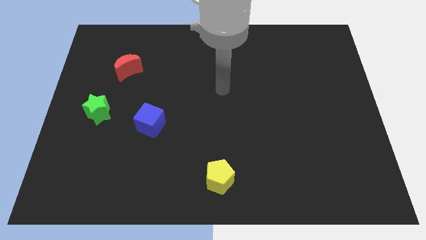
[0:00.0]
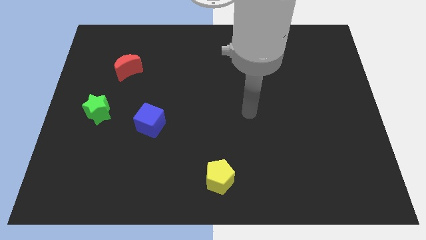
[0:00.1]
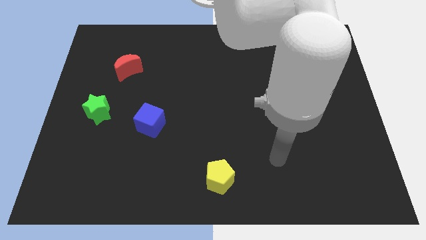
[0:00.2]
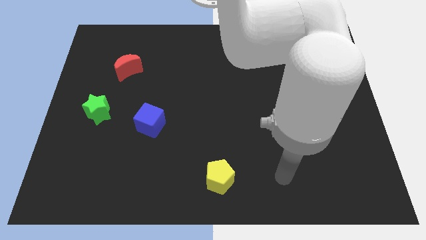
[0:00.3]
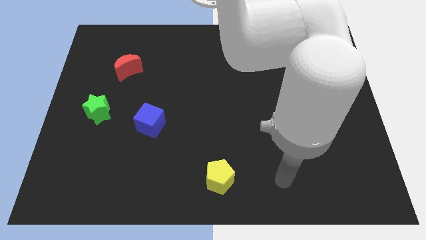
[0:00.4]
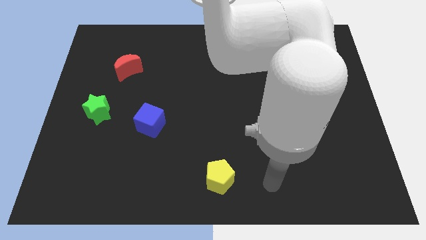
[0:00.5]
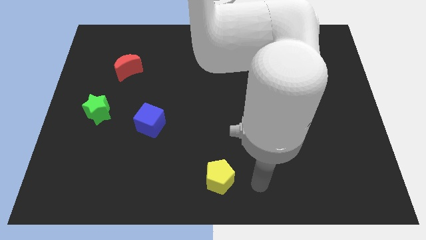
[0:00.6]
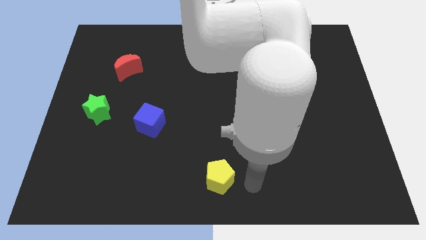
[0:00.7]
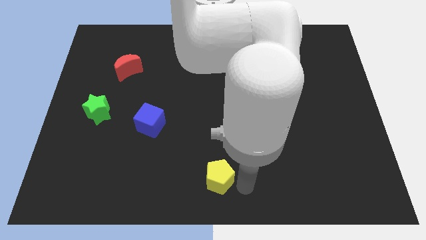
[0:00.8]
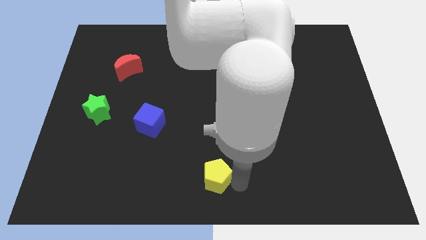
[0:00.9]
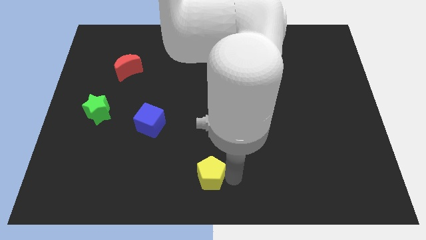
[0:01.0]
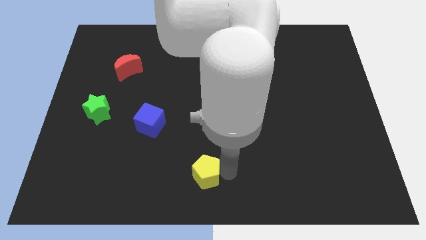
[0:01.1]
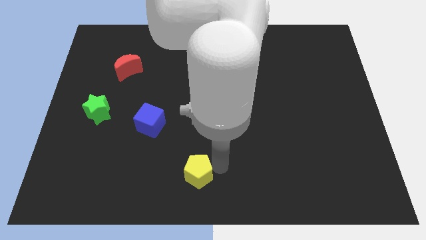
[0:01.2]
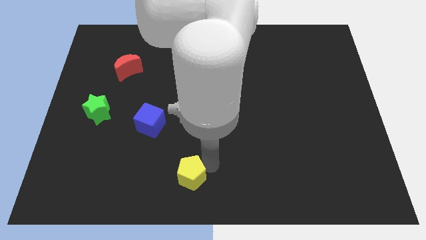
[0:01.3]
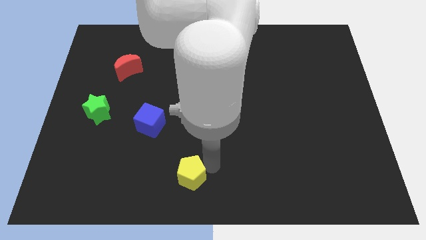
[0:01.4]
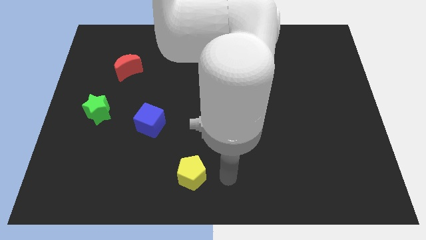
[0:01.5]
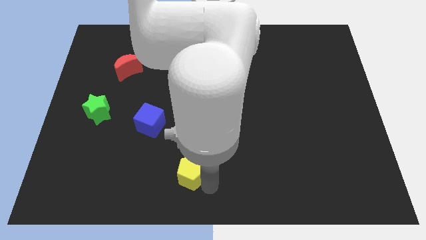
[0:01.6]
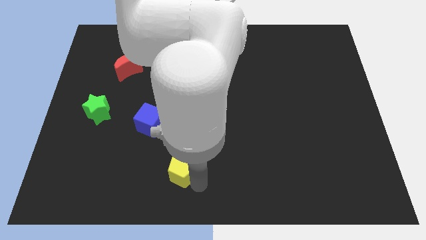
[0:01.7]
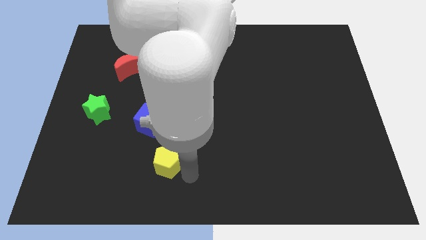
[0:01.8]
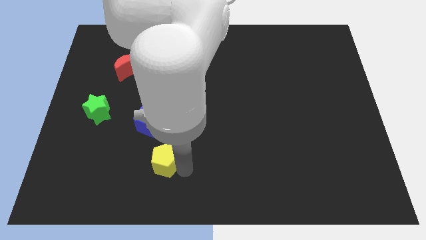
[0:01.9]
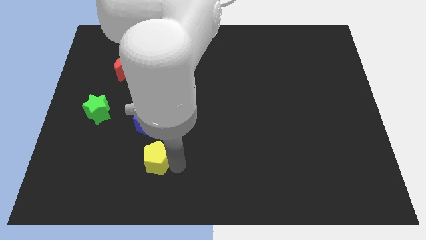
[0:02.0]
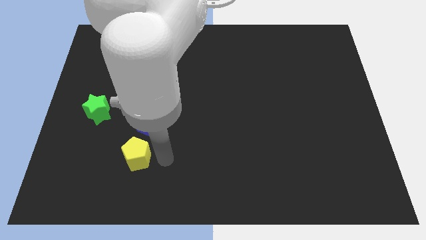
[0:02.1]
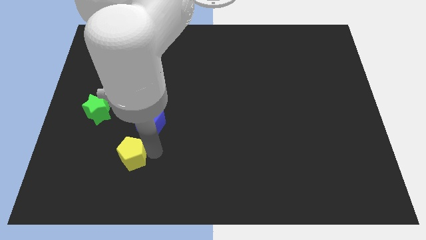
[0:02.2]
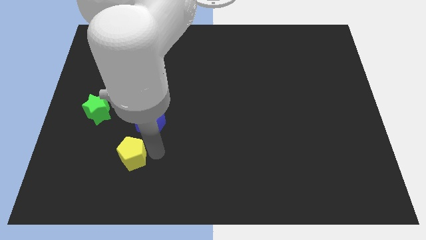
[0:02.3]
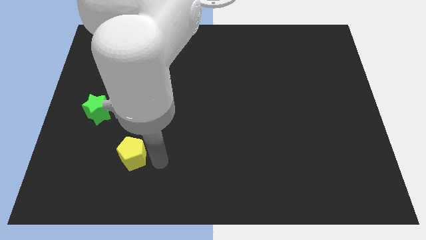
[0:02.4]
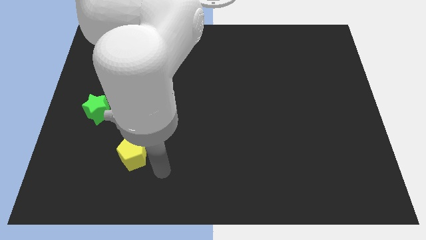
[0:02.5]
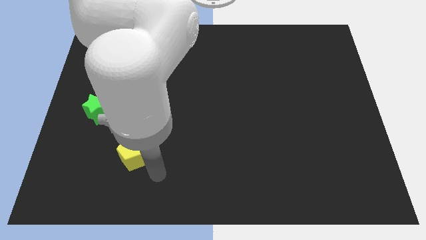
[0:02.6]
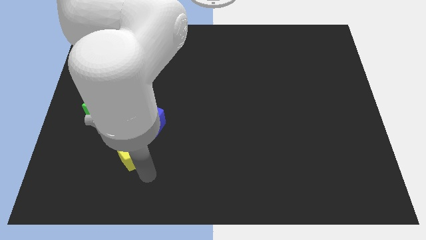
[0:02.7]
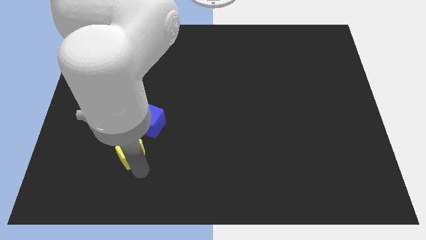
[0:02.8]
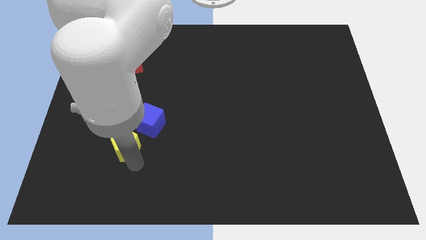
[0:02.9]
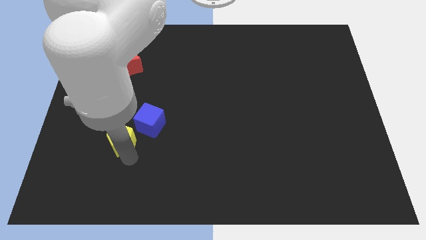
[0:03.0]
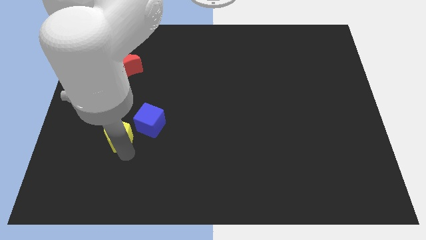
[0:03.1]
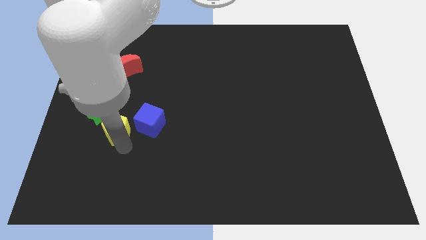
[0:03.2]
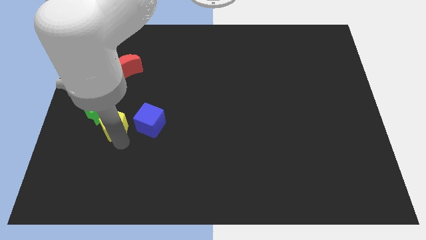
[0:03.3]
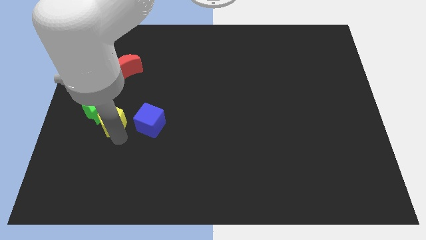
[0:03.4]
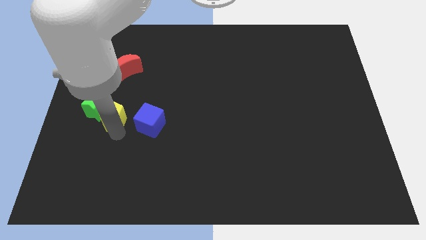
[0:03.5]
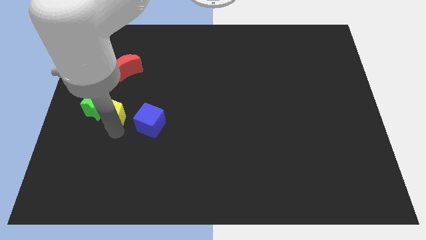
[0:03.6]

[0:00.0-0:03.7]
push the pentagon towards the green star

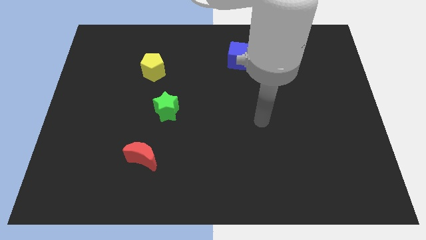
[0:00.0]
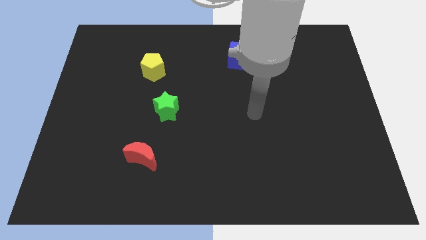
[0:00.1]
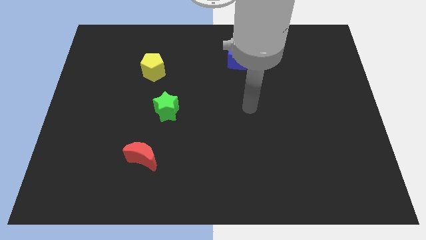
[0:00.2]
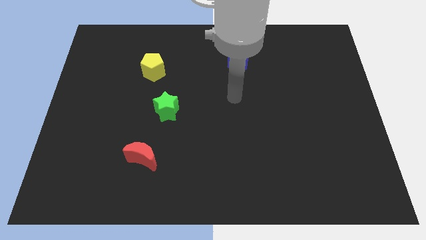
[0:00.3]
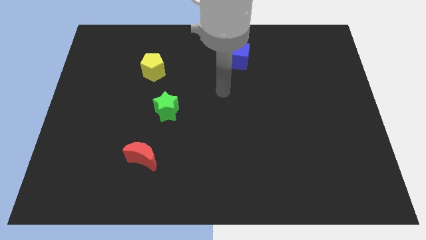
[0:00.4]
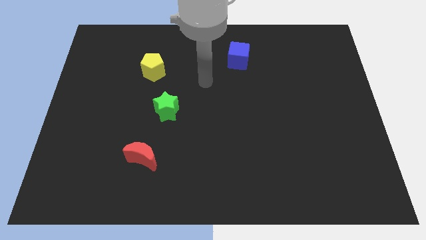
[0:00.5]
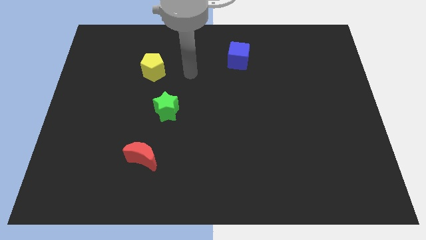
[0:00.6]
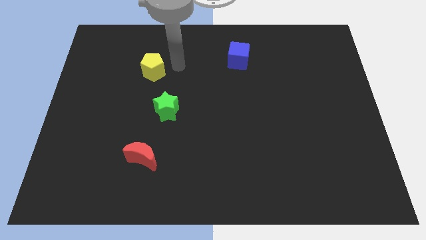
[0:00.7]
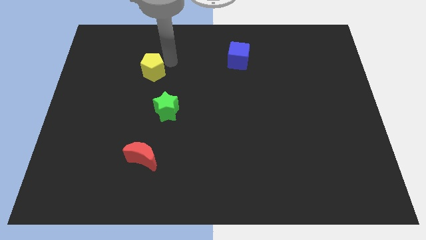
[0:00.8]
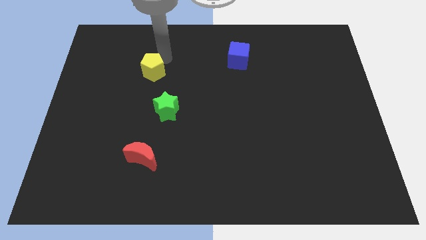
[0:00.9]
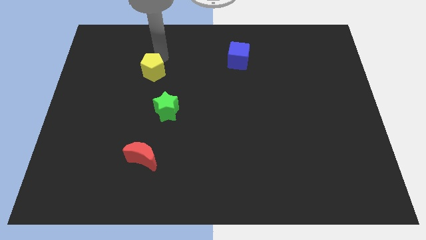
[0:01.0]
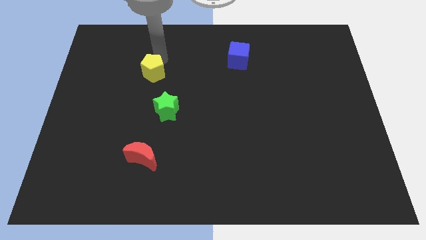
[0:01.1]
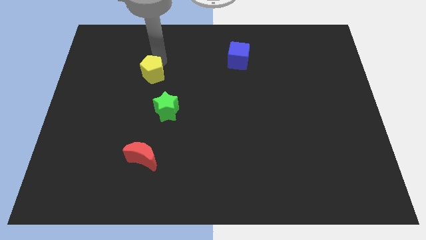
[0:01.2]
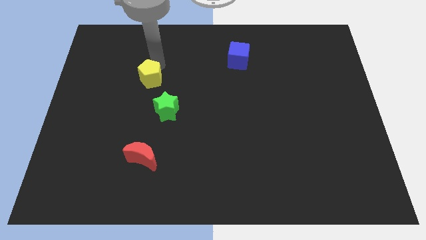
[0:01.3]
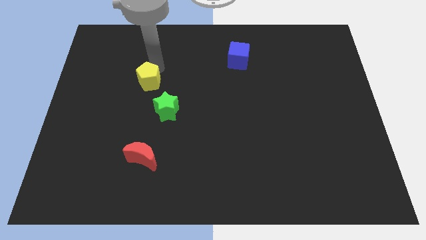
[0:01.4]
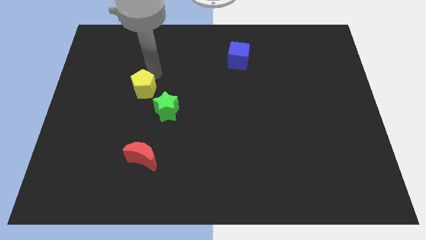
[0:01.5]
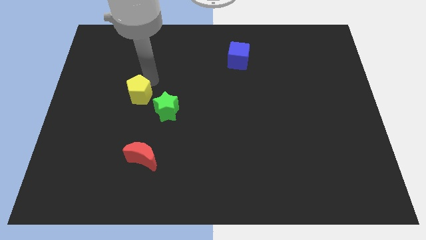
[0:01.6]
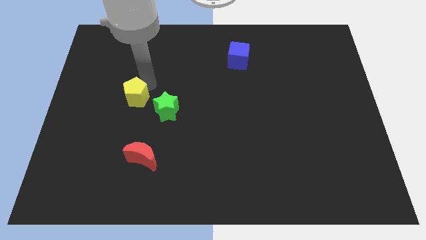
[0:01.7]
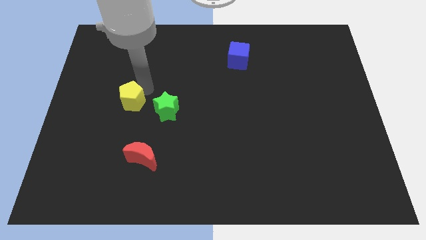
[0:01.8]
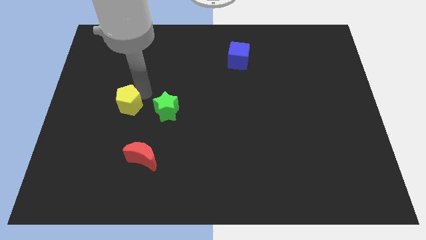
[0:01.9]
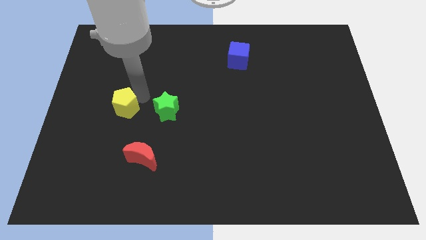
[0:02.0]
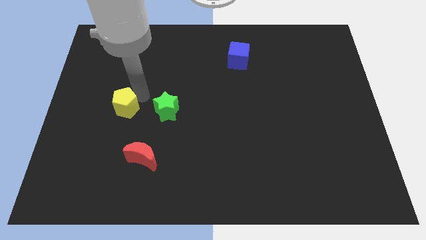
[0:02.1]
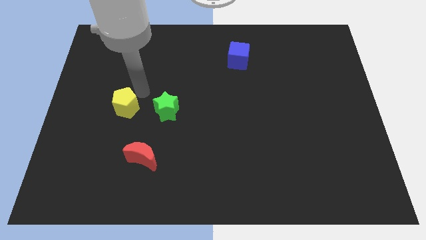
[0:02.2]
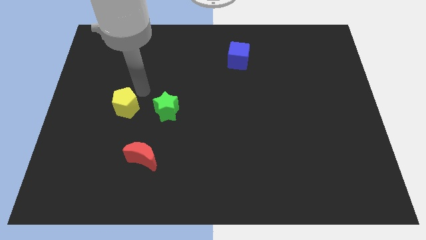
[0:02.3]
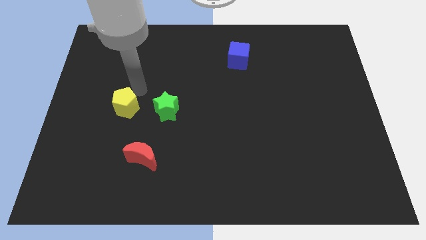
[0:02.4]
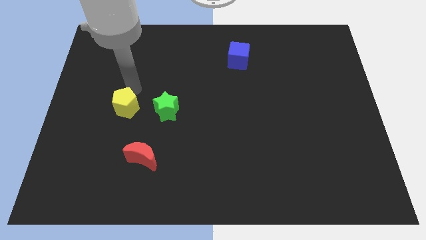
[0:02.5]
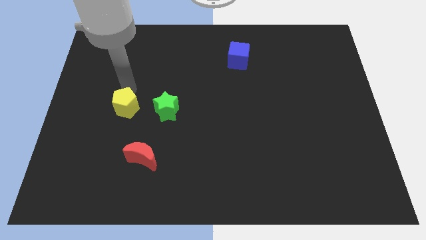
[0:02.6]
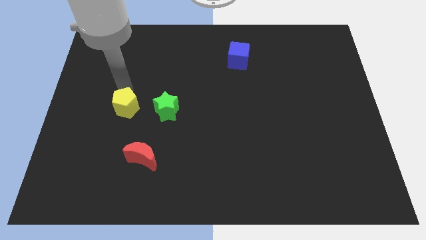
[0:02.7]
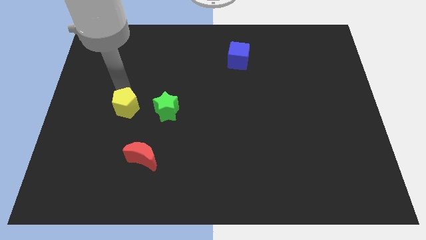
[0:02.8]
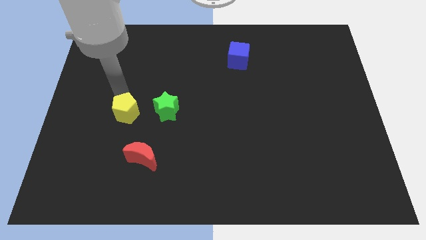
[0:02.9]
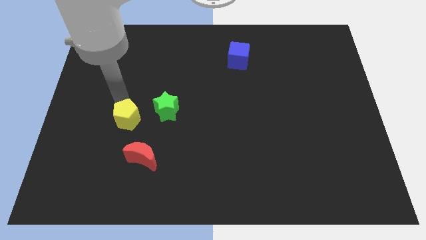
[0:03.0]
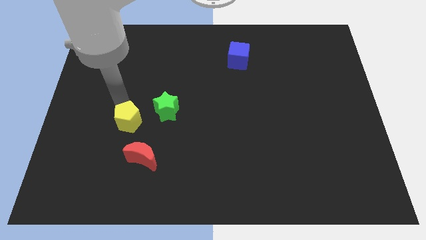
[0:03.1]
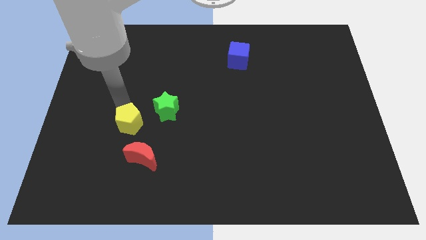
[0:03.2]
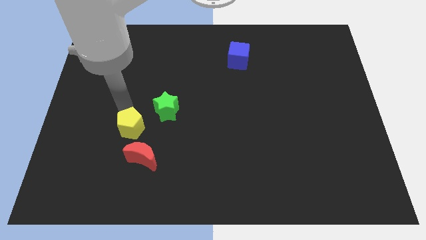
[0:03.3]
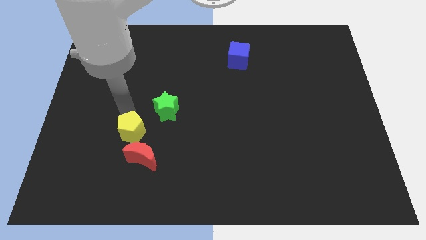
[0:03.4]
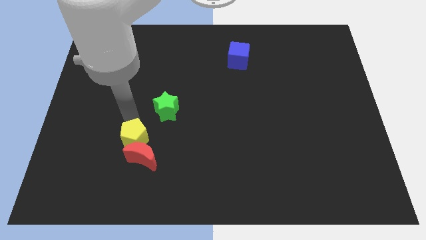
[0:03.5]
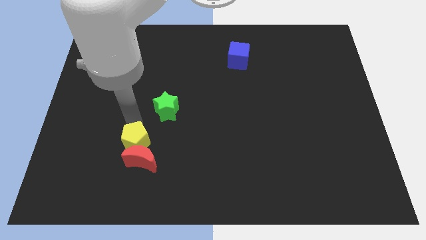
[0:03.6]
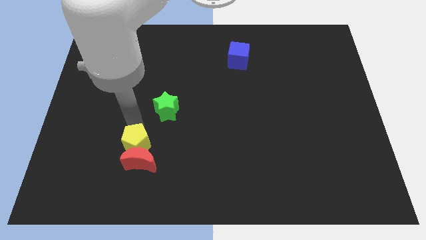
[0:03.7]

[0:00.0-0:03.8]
put the yellow block to the moon

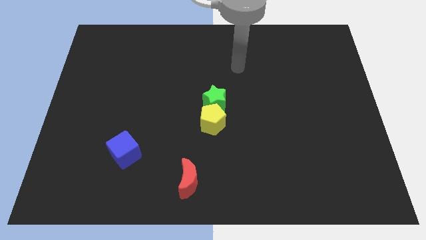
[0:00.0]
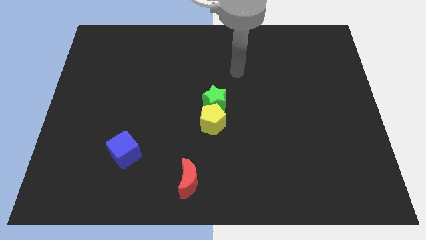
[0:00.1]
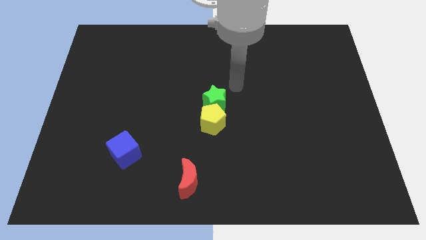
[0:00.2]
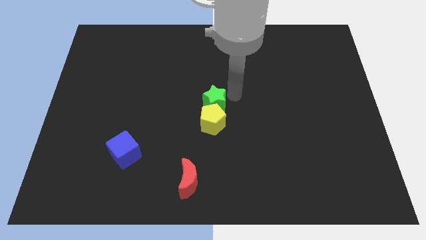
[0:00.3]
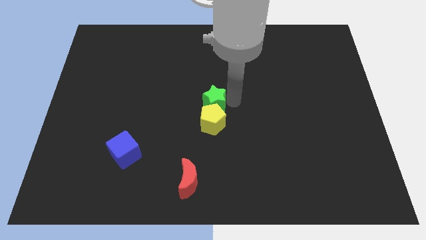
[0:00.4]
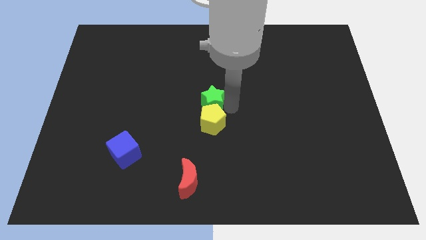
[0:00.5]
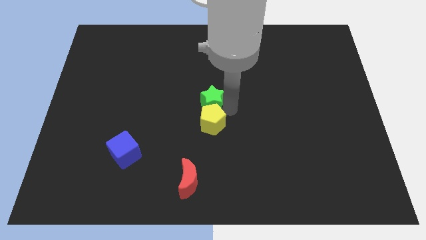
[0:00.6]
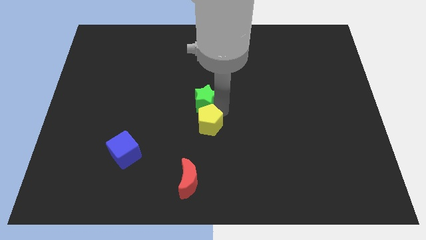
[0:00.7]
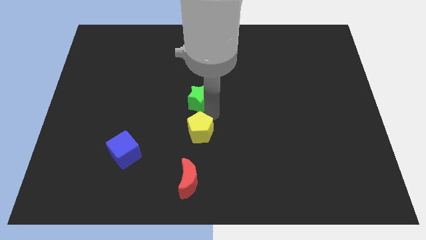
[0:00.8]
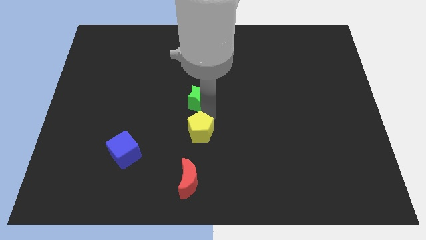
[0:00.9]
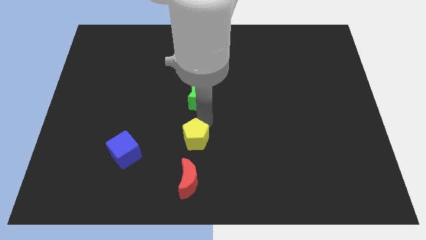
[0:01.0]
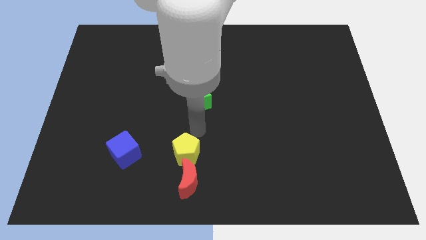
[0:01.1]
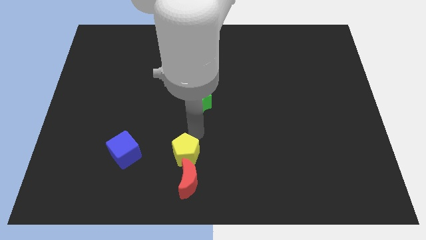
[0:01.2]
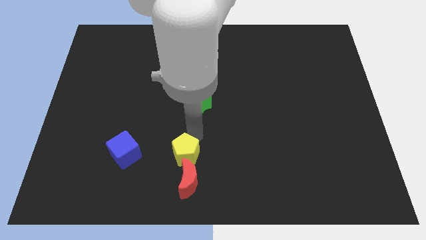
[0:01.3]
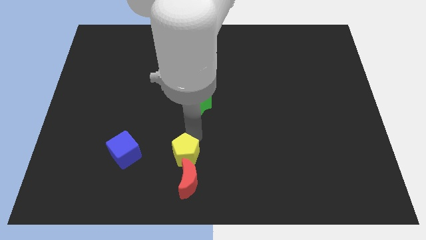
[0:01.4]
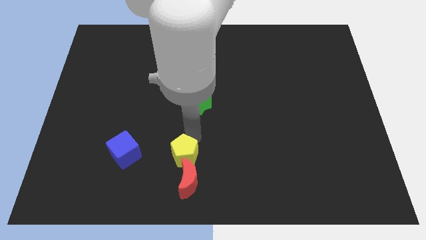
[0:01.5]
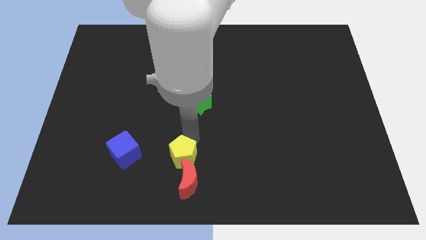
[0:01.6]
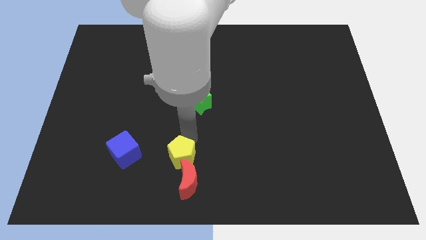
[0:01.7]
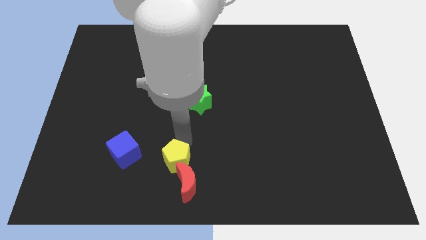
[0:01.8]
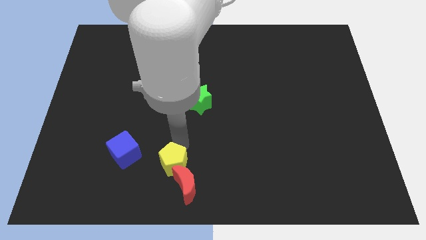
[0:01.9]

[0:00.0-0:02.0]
move the pentagon to the red block
